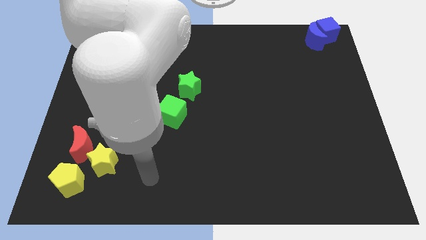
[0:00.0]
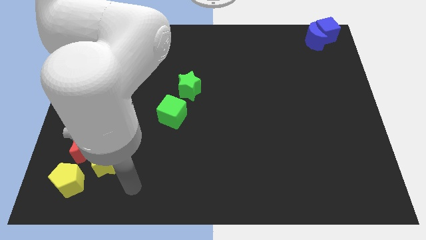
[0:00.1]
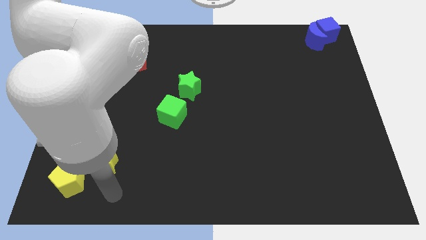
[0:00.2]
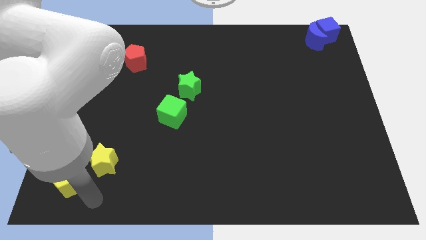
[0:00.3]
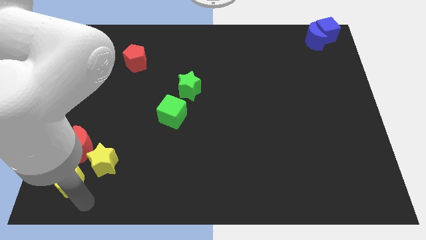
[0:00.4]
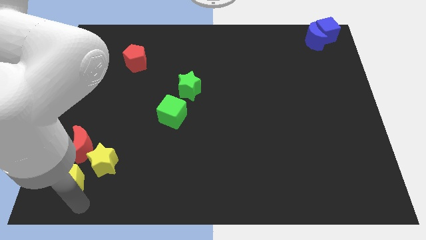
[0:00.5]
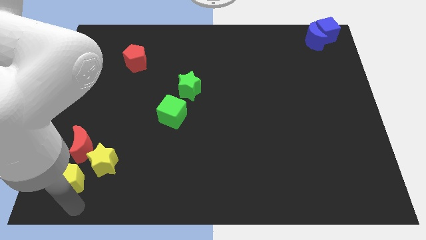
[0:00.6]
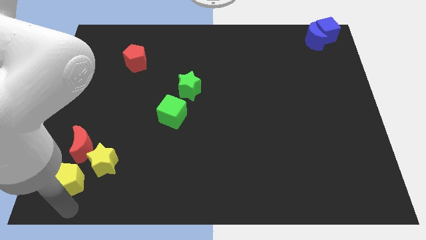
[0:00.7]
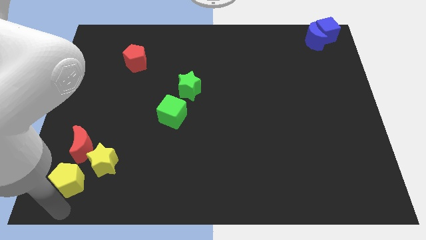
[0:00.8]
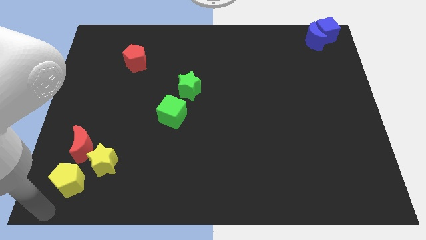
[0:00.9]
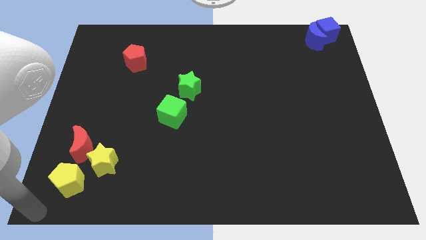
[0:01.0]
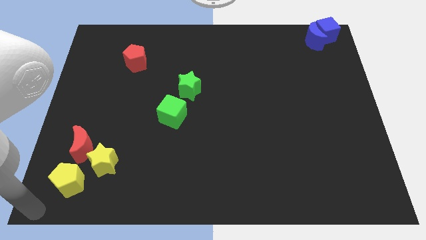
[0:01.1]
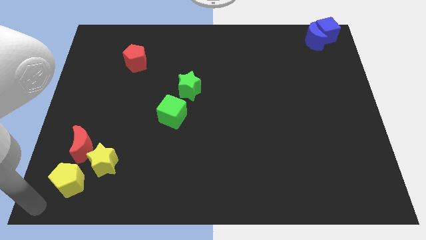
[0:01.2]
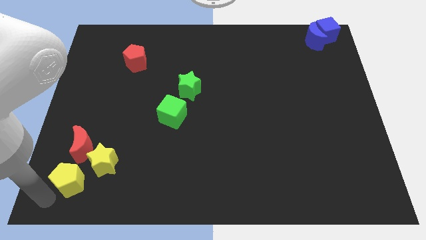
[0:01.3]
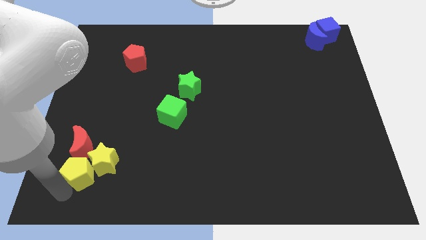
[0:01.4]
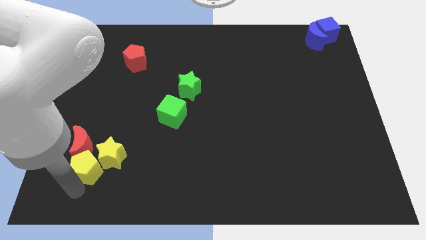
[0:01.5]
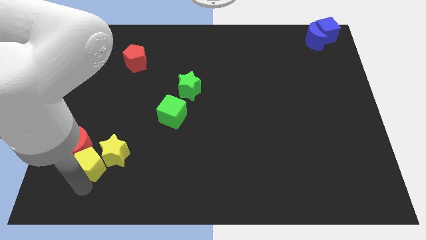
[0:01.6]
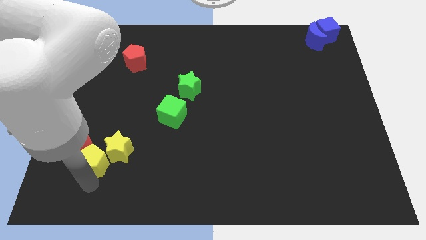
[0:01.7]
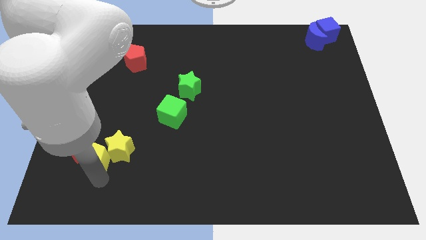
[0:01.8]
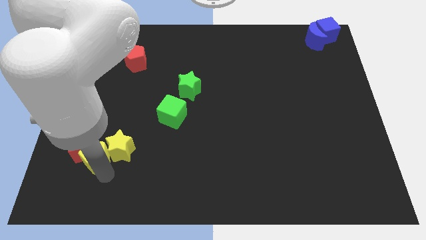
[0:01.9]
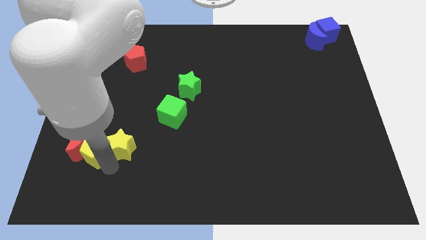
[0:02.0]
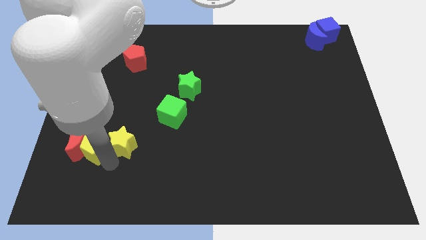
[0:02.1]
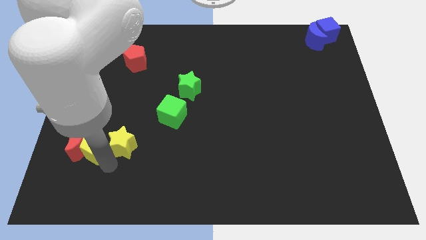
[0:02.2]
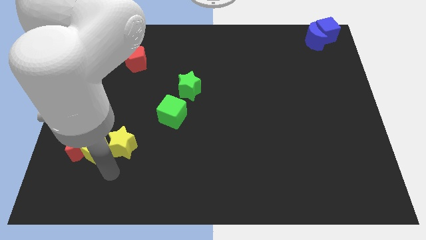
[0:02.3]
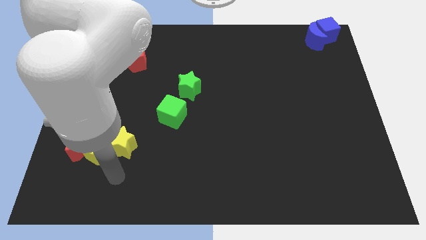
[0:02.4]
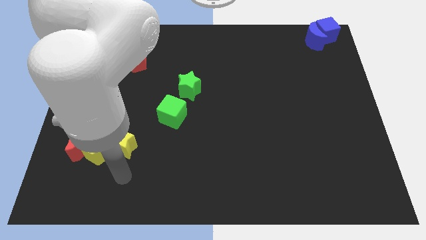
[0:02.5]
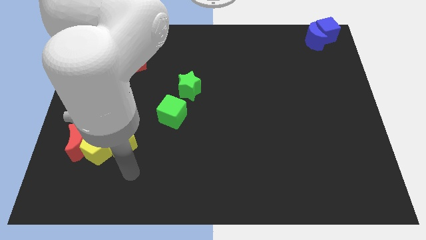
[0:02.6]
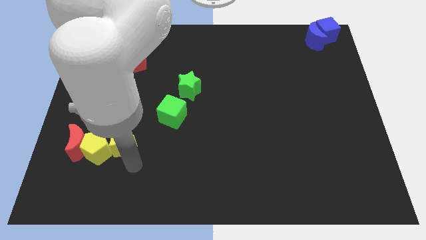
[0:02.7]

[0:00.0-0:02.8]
move the yellow pentagon in between the yellow star and red crescent

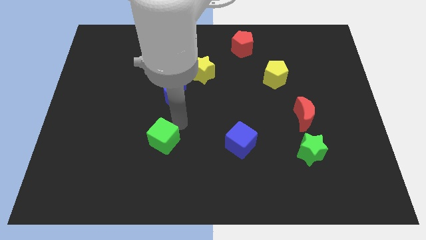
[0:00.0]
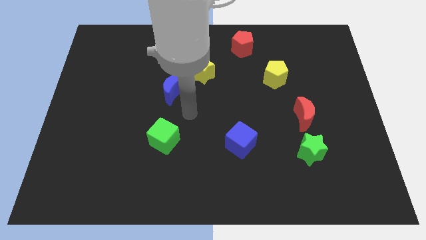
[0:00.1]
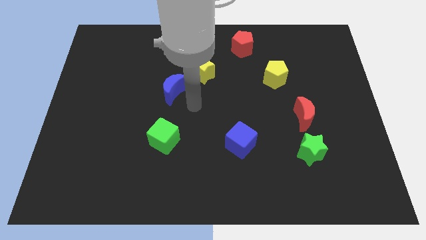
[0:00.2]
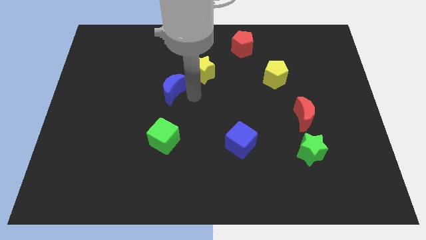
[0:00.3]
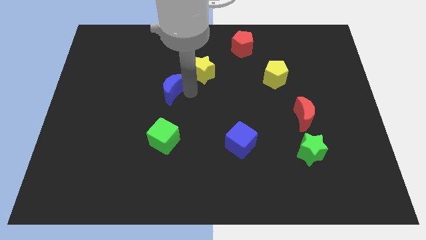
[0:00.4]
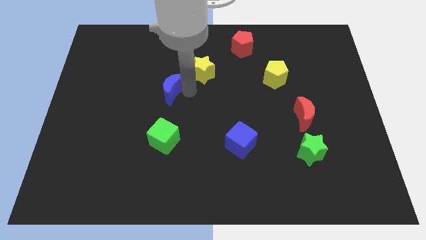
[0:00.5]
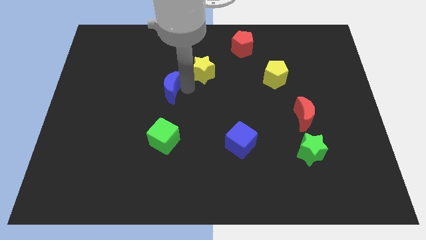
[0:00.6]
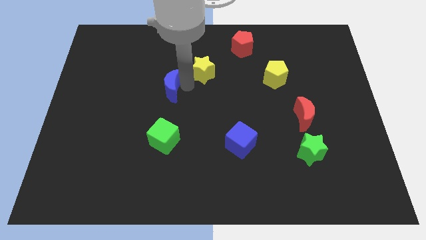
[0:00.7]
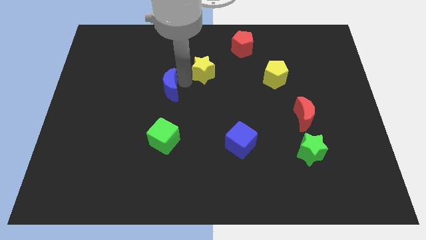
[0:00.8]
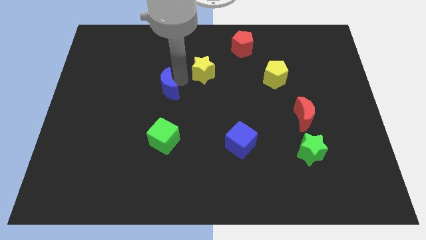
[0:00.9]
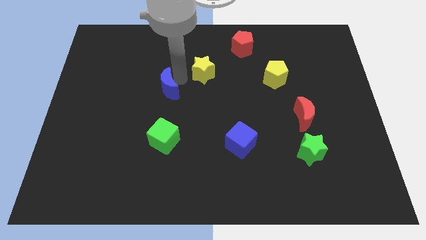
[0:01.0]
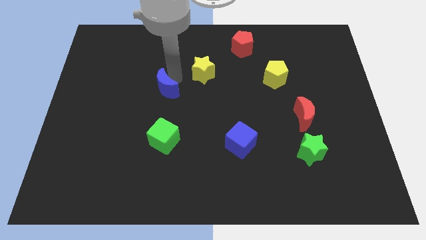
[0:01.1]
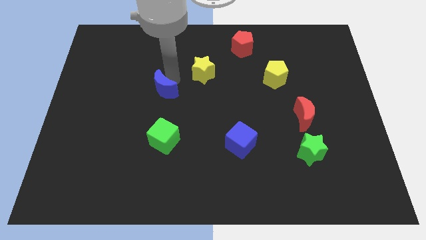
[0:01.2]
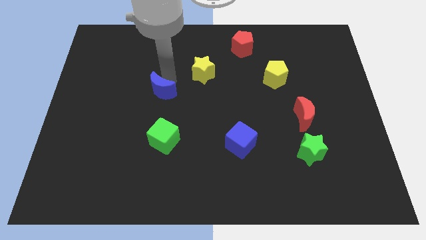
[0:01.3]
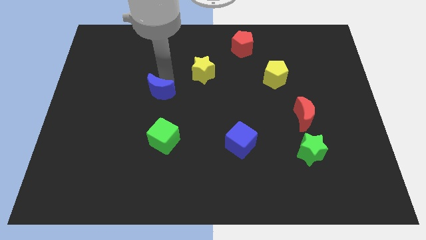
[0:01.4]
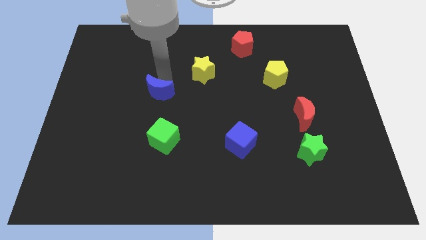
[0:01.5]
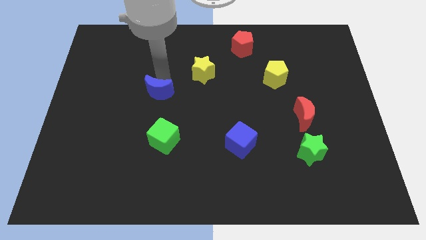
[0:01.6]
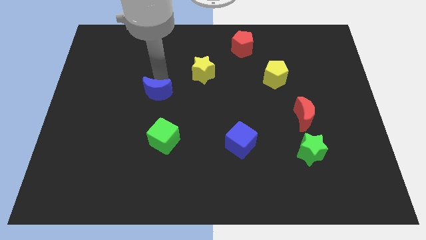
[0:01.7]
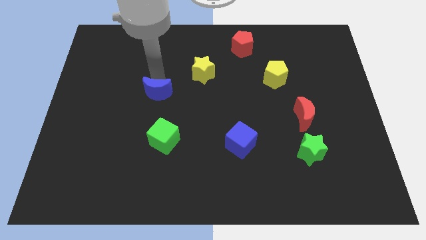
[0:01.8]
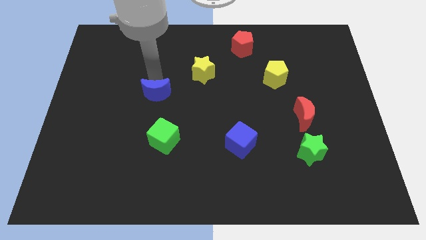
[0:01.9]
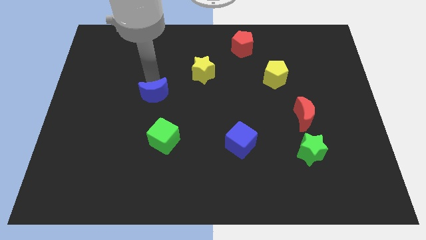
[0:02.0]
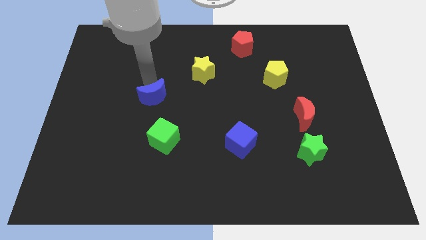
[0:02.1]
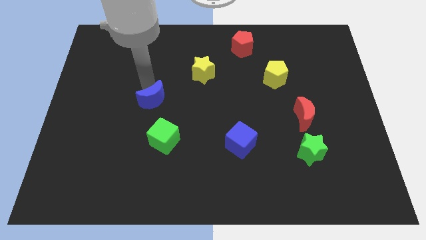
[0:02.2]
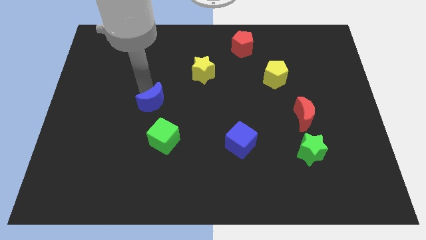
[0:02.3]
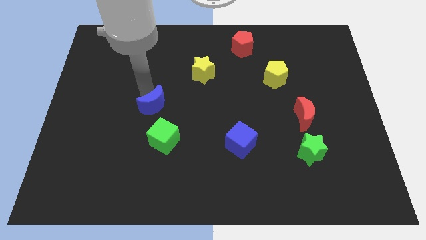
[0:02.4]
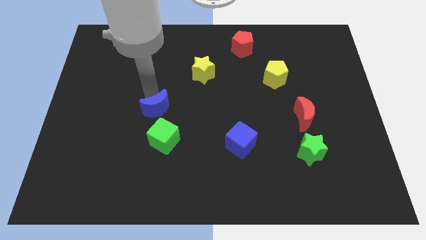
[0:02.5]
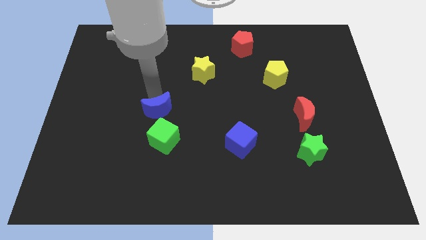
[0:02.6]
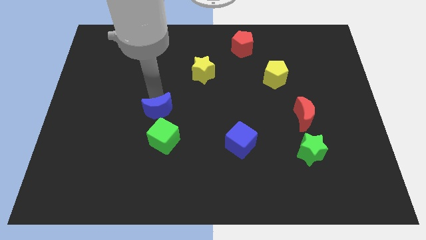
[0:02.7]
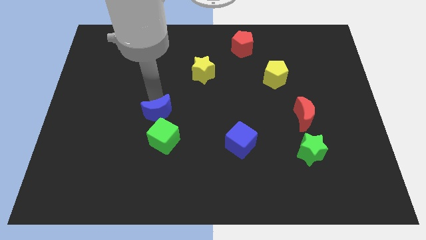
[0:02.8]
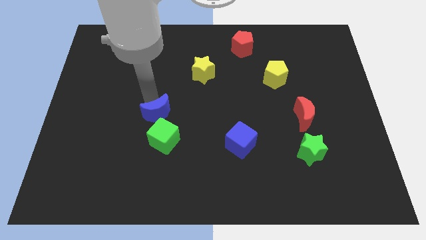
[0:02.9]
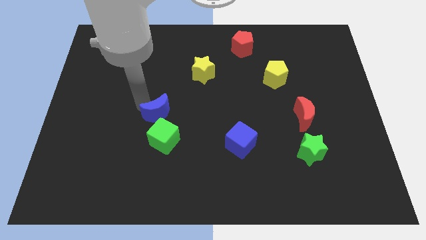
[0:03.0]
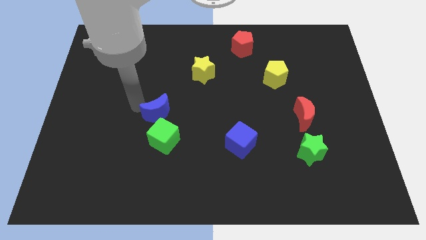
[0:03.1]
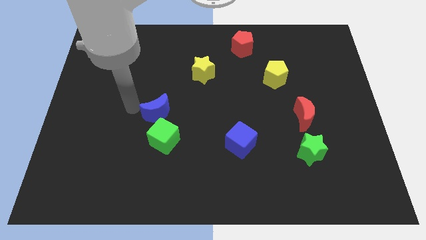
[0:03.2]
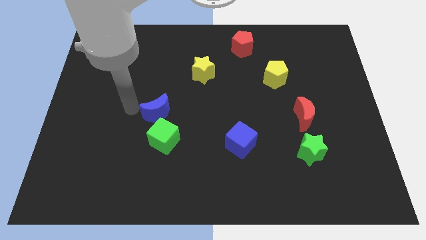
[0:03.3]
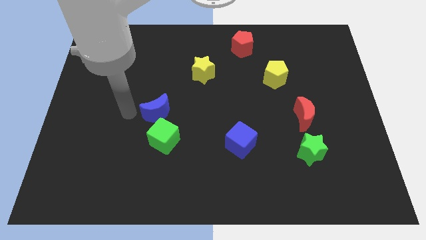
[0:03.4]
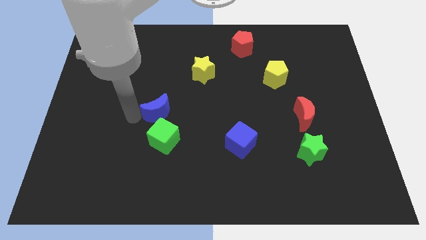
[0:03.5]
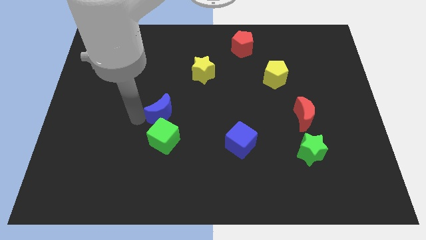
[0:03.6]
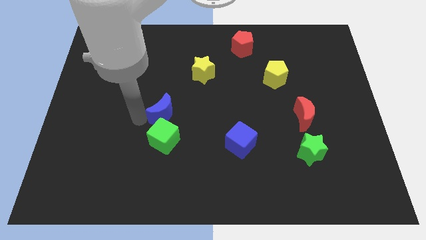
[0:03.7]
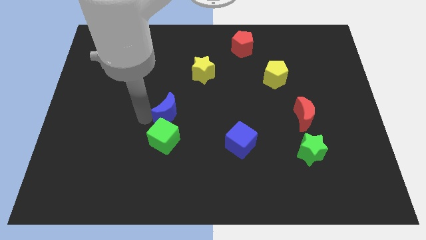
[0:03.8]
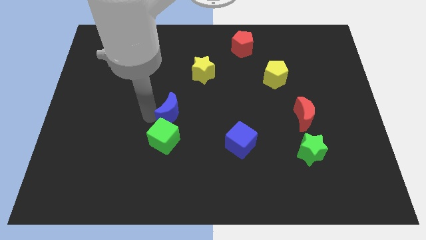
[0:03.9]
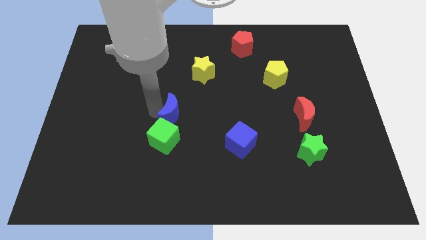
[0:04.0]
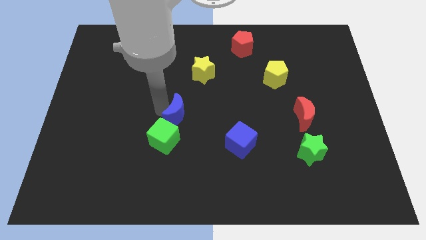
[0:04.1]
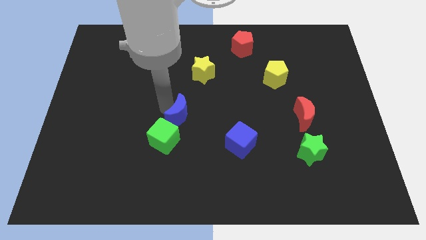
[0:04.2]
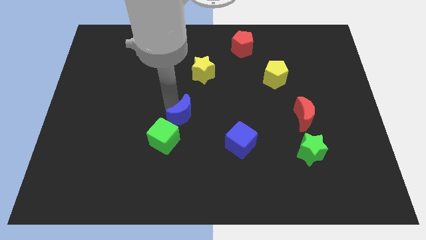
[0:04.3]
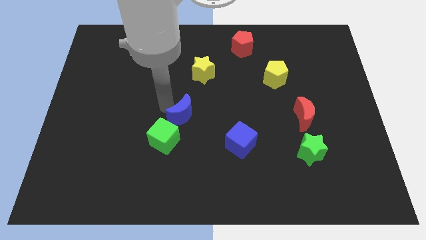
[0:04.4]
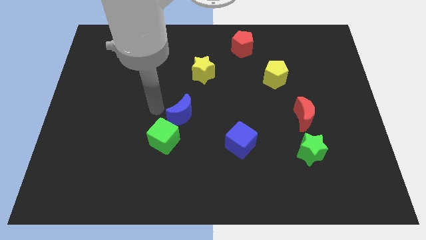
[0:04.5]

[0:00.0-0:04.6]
move the blue moon to the diagonal up right of green cube

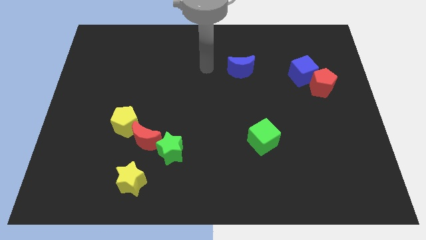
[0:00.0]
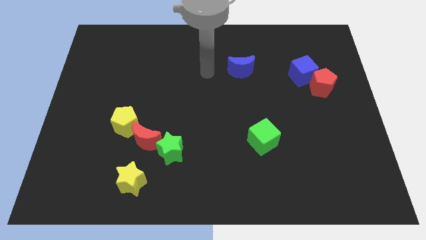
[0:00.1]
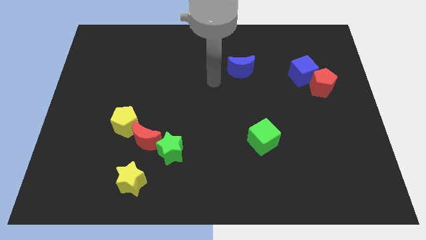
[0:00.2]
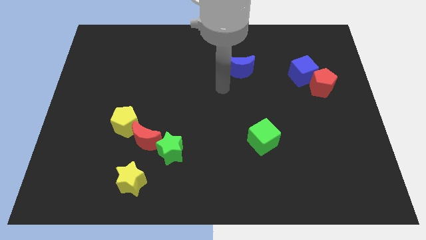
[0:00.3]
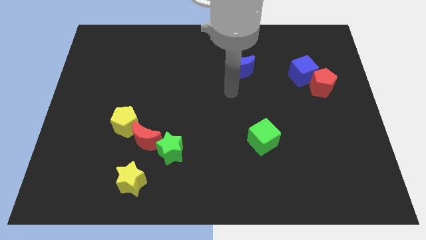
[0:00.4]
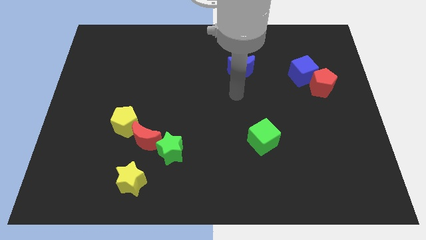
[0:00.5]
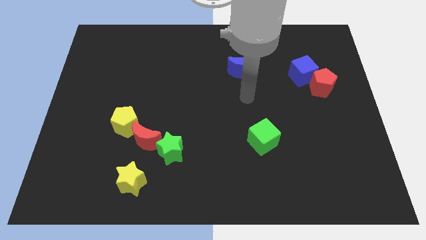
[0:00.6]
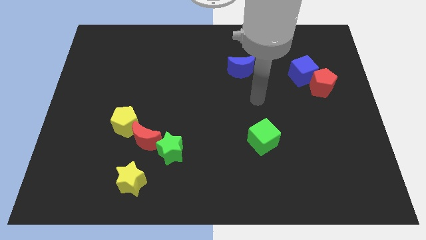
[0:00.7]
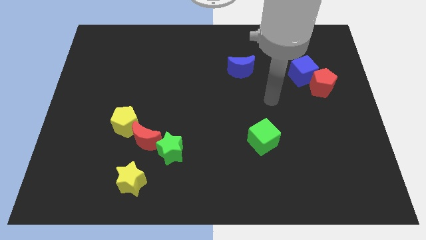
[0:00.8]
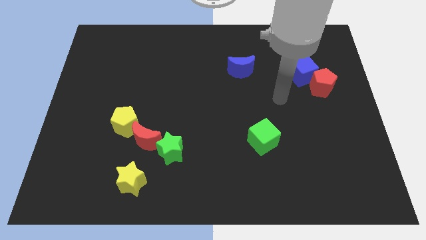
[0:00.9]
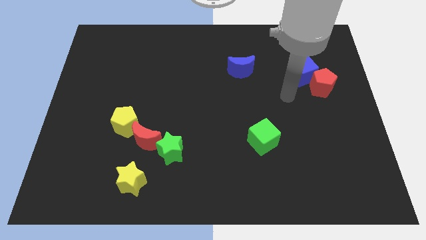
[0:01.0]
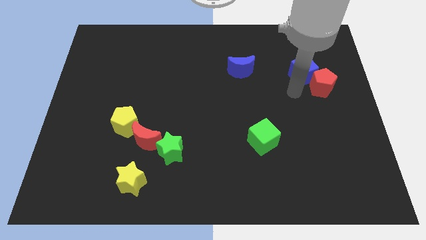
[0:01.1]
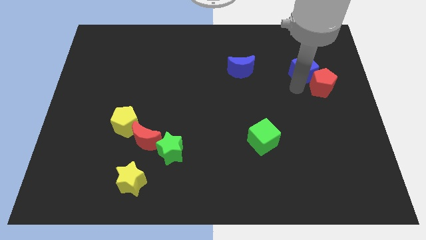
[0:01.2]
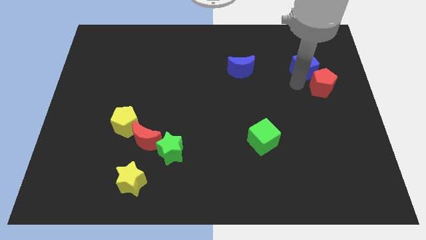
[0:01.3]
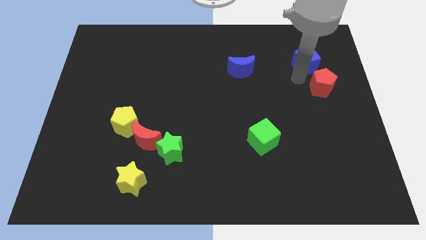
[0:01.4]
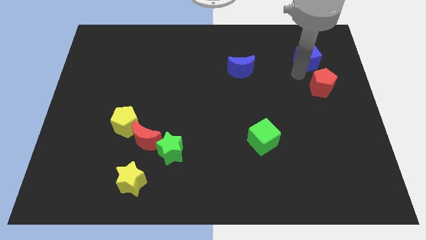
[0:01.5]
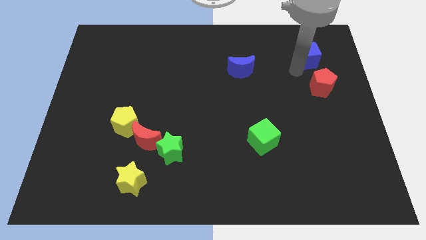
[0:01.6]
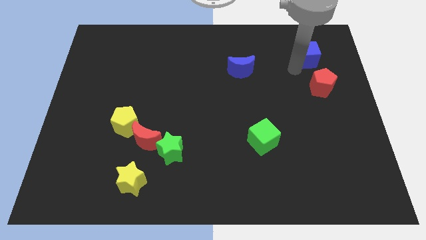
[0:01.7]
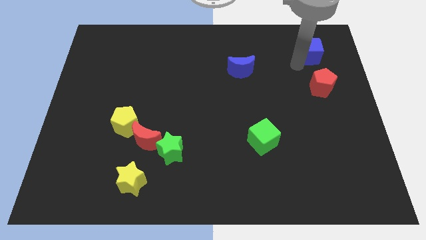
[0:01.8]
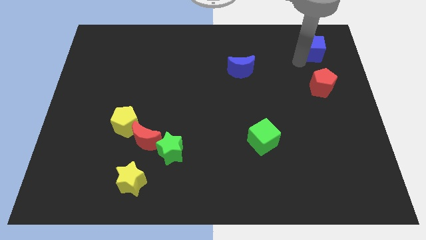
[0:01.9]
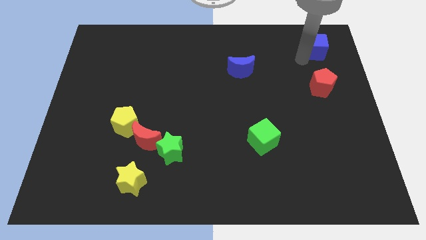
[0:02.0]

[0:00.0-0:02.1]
move the blue cube at the top of the red pentagon
